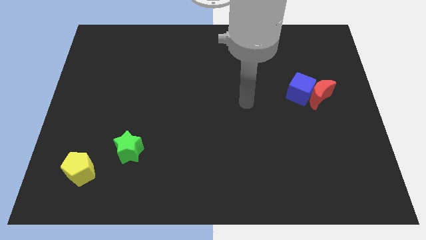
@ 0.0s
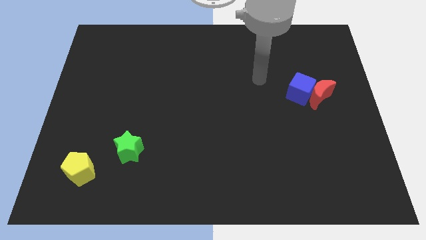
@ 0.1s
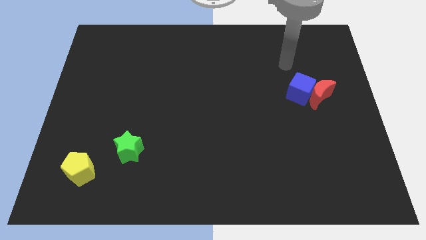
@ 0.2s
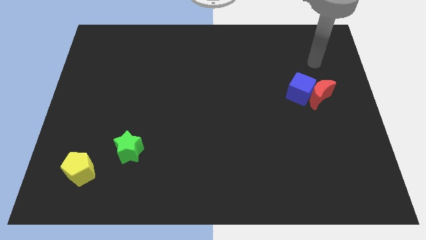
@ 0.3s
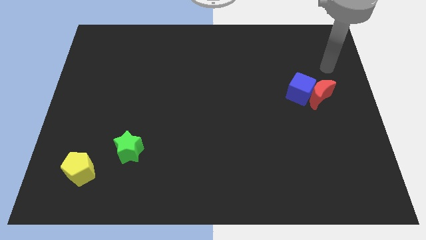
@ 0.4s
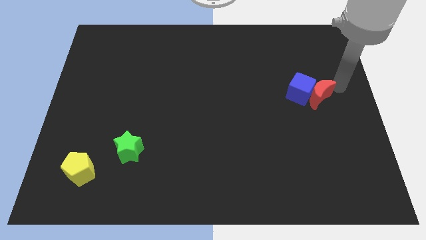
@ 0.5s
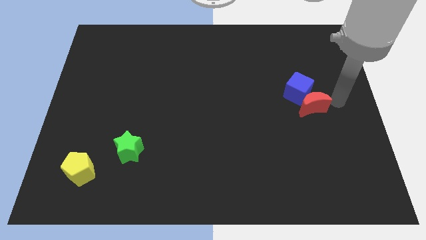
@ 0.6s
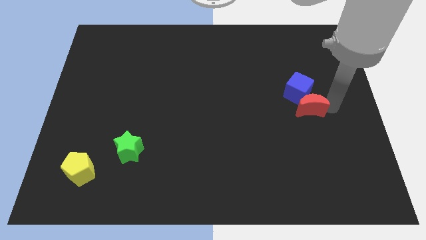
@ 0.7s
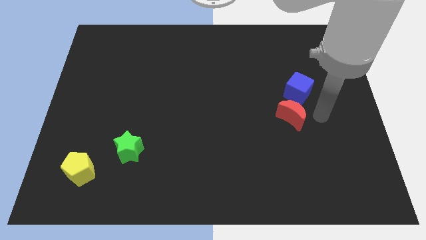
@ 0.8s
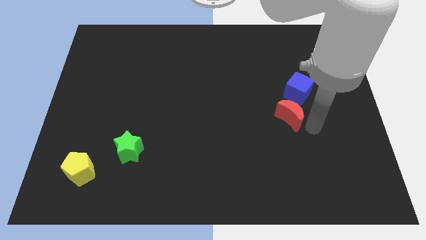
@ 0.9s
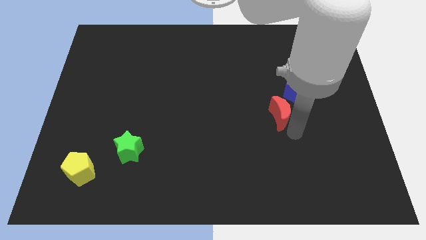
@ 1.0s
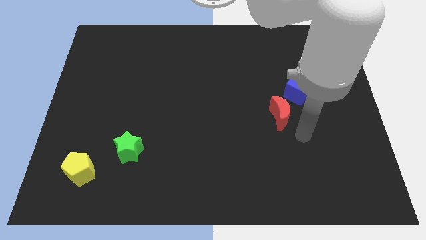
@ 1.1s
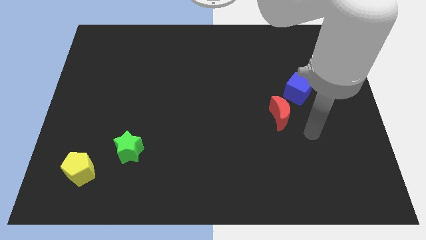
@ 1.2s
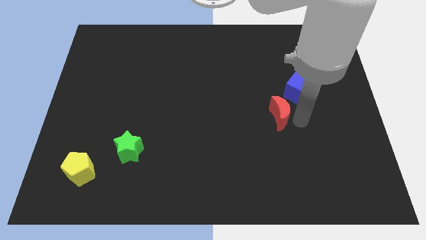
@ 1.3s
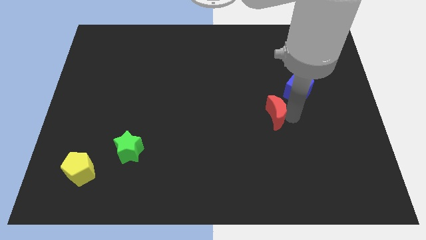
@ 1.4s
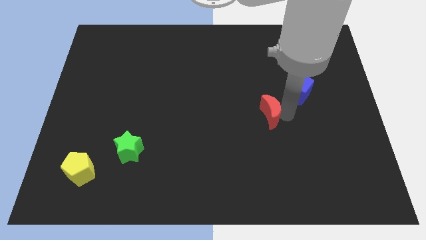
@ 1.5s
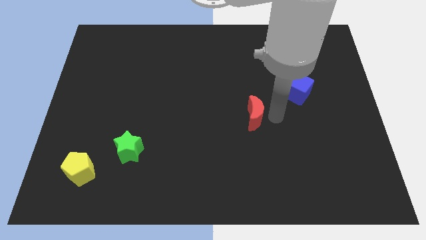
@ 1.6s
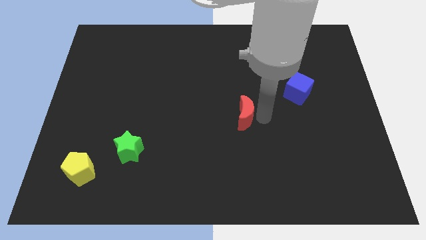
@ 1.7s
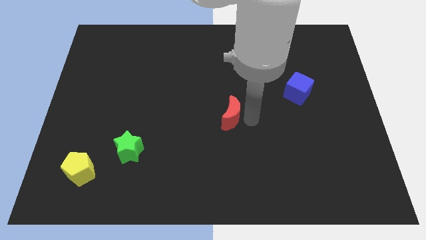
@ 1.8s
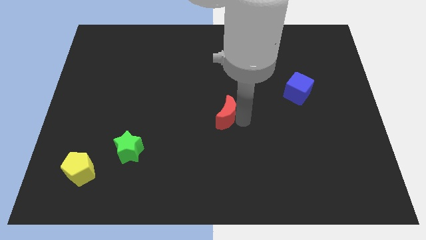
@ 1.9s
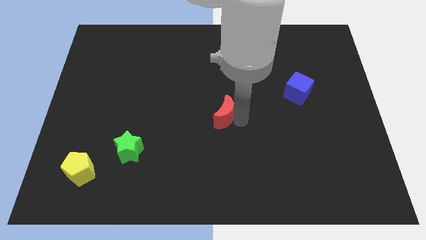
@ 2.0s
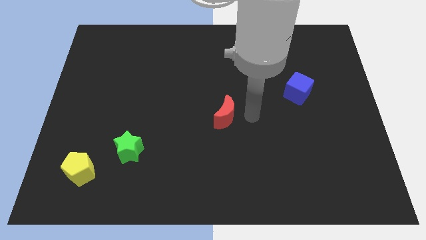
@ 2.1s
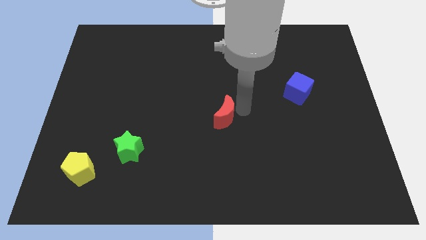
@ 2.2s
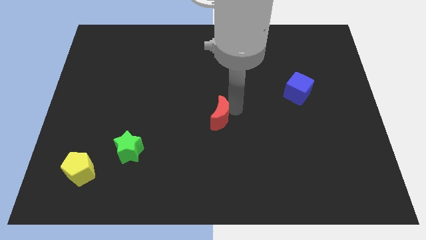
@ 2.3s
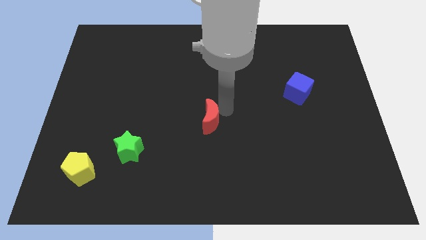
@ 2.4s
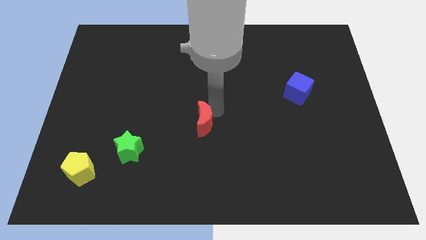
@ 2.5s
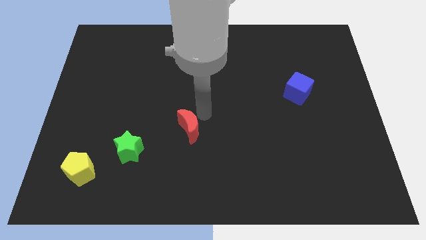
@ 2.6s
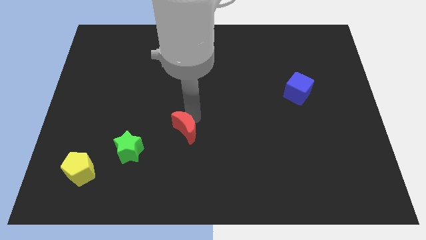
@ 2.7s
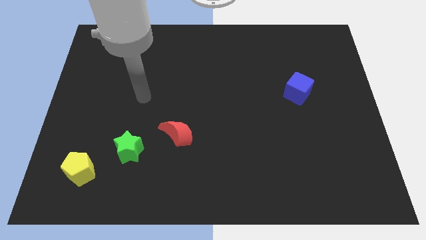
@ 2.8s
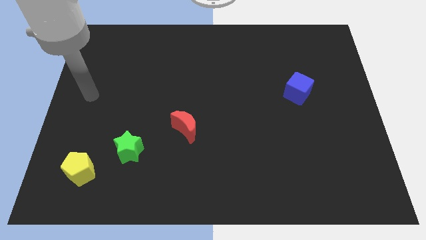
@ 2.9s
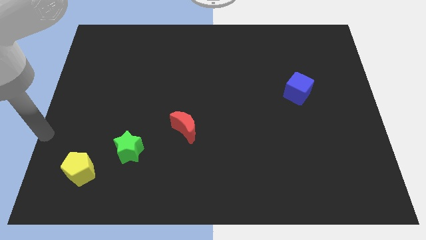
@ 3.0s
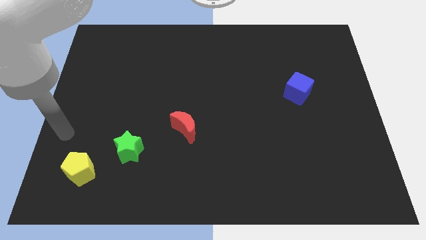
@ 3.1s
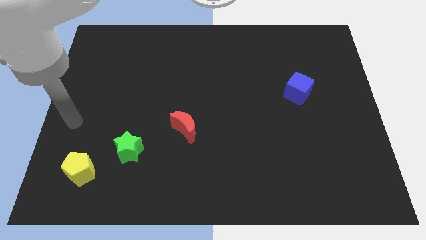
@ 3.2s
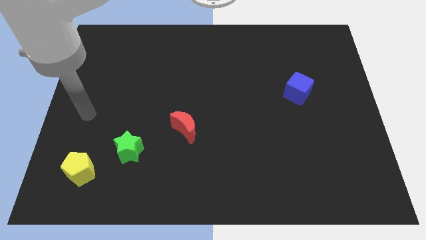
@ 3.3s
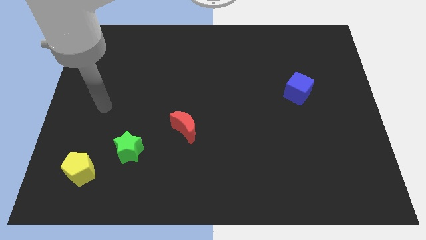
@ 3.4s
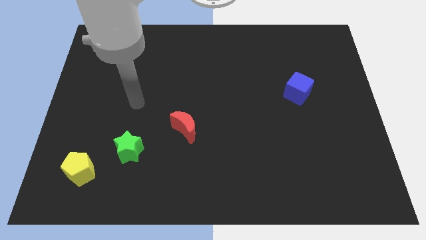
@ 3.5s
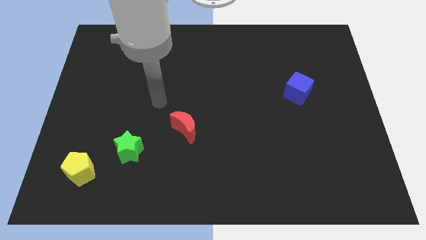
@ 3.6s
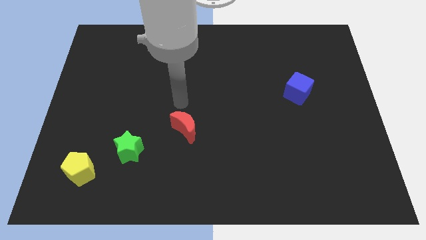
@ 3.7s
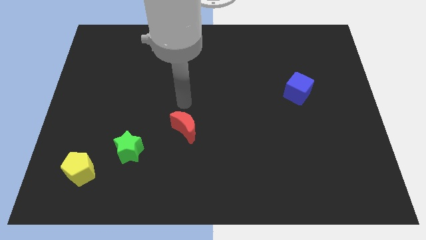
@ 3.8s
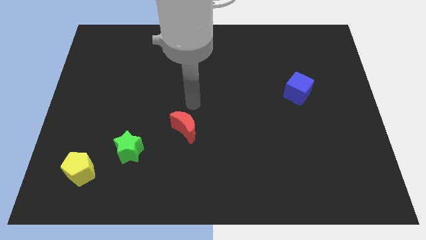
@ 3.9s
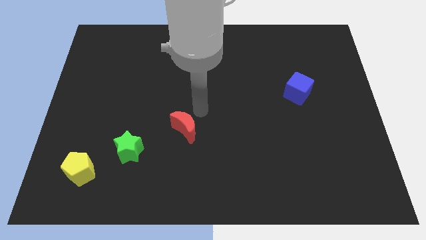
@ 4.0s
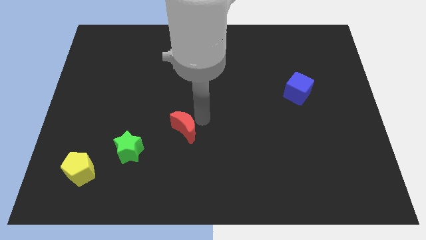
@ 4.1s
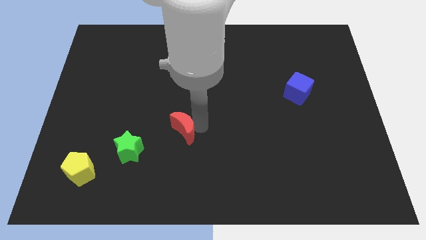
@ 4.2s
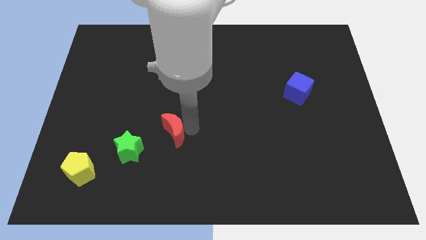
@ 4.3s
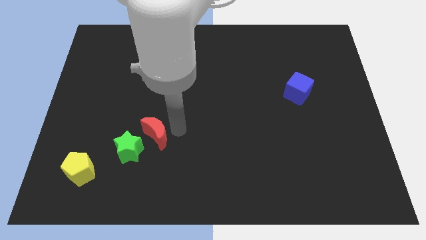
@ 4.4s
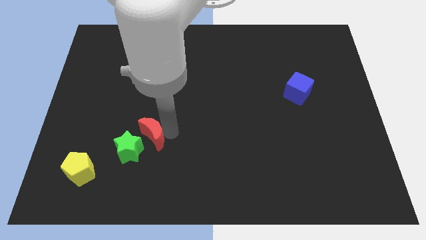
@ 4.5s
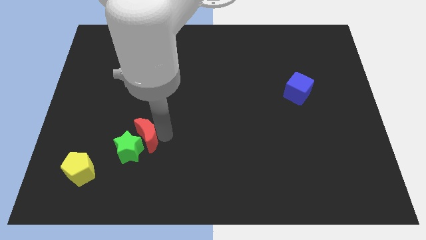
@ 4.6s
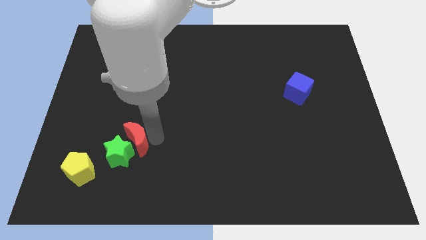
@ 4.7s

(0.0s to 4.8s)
push the red moon towards the green block

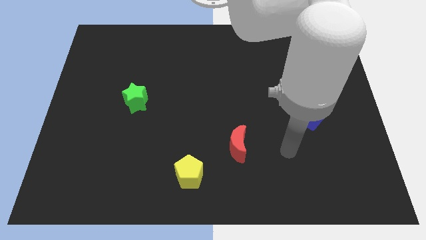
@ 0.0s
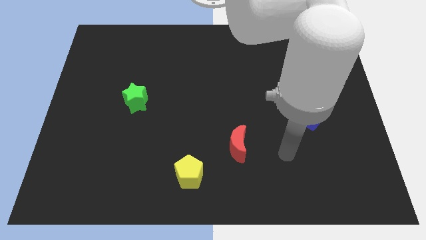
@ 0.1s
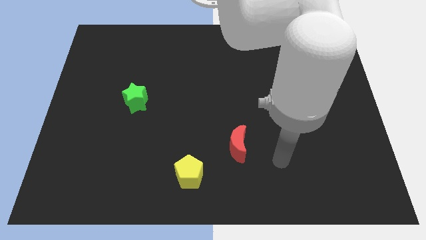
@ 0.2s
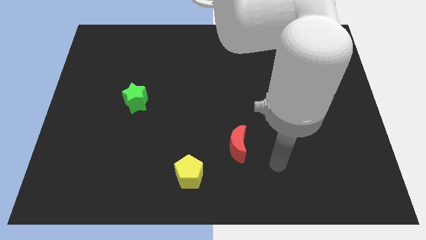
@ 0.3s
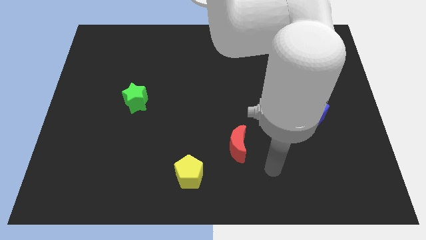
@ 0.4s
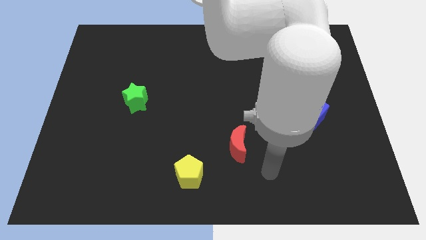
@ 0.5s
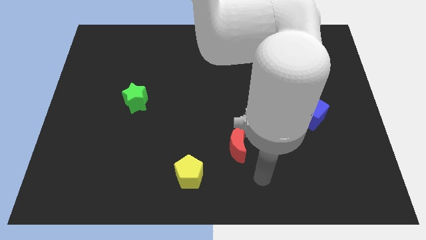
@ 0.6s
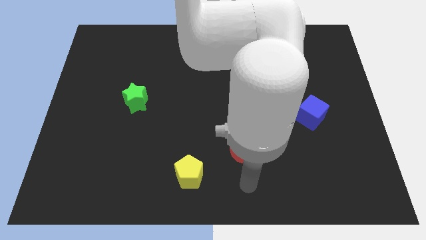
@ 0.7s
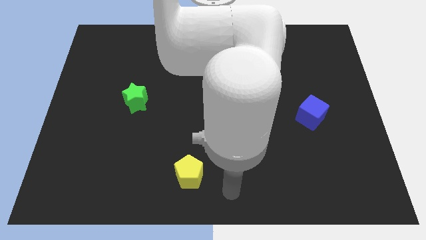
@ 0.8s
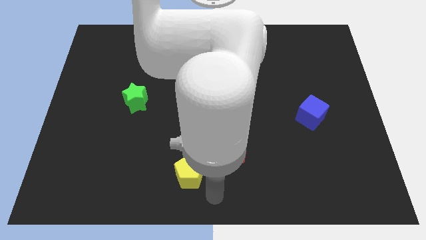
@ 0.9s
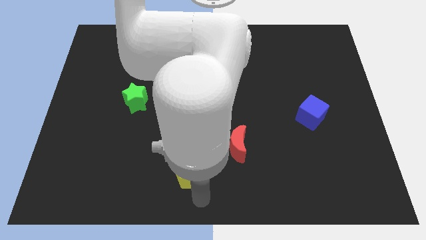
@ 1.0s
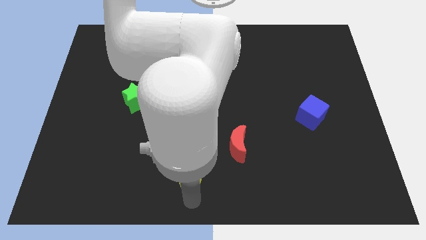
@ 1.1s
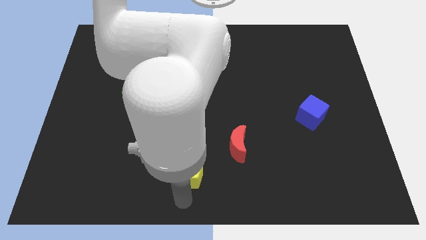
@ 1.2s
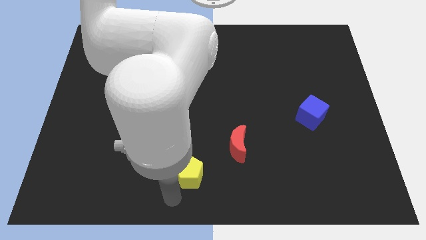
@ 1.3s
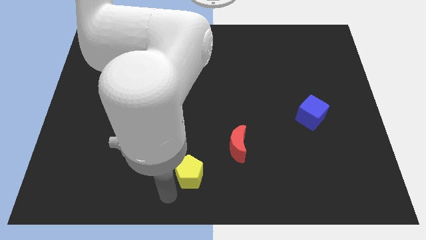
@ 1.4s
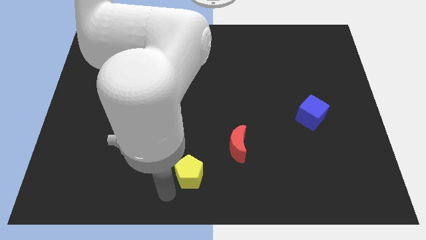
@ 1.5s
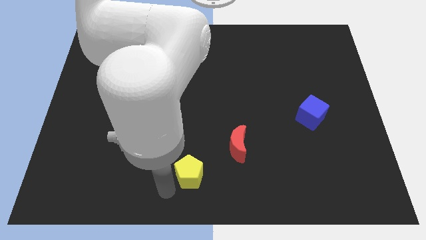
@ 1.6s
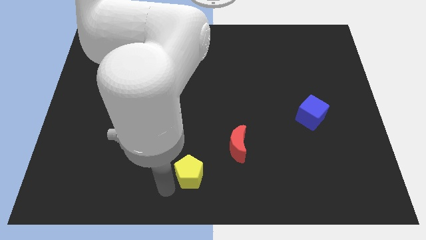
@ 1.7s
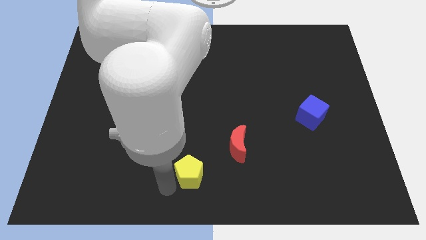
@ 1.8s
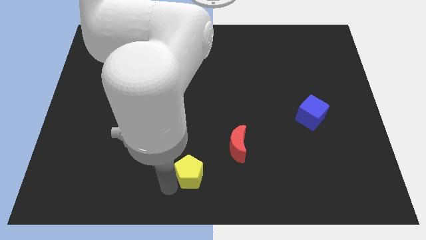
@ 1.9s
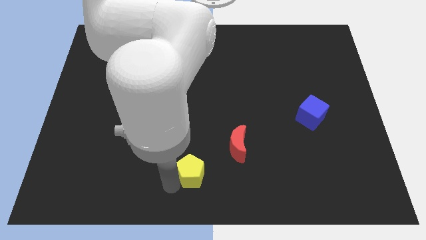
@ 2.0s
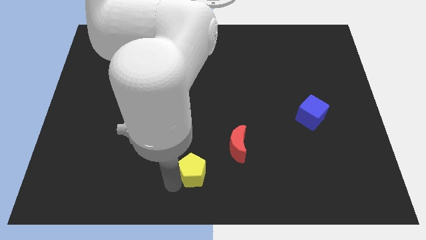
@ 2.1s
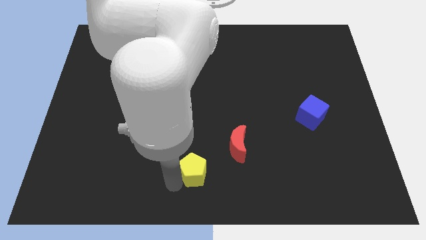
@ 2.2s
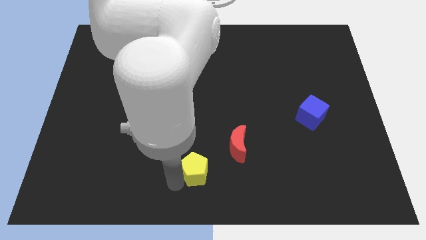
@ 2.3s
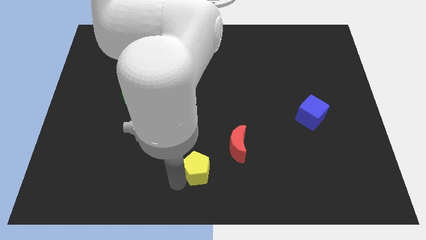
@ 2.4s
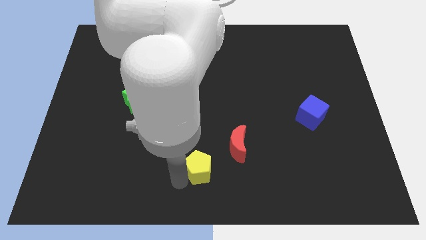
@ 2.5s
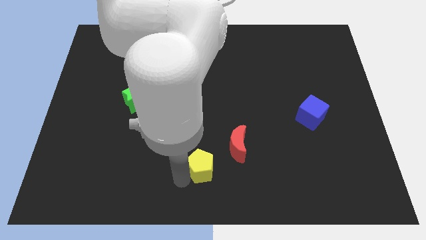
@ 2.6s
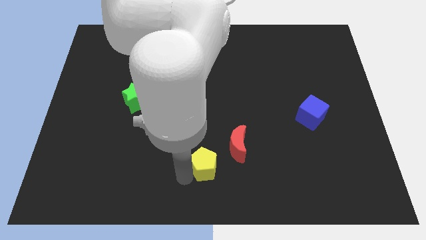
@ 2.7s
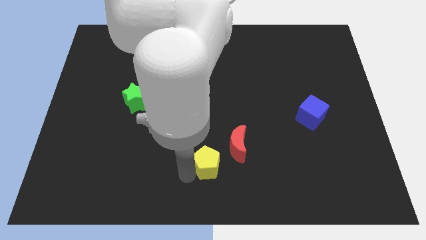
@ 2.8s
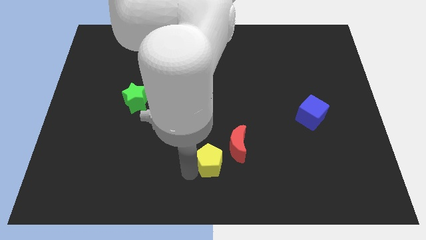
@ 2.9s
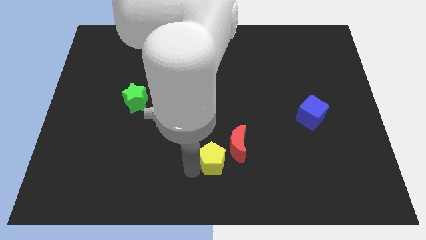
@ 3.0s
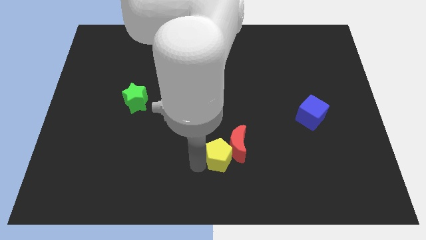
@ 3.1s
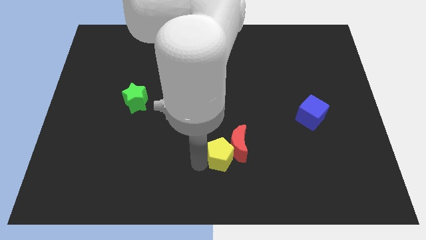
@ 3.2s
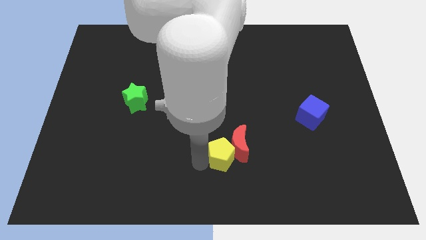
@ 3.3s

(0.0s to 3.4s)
push the yellow pentagon next to the moon
